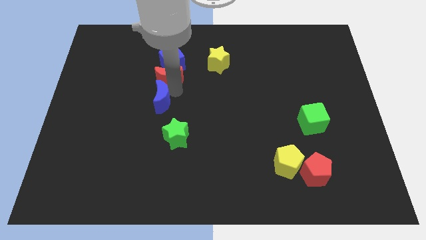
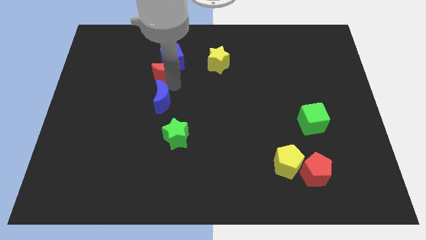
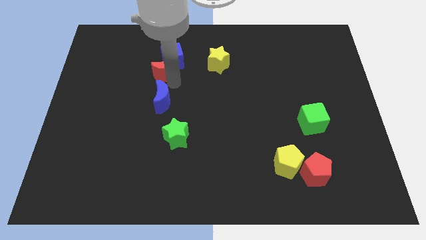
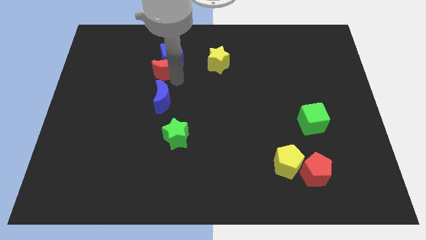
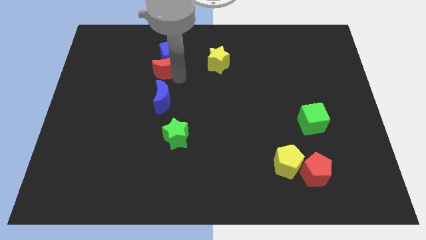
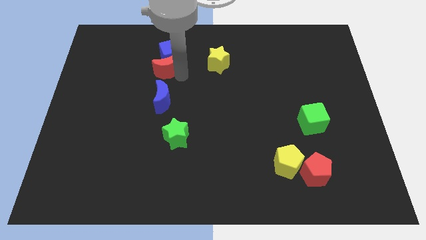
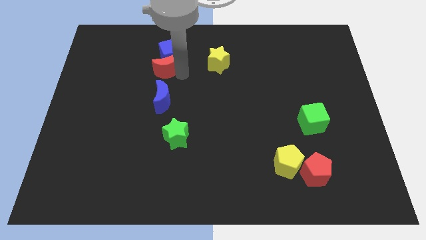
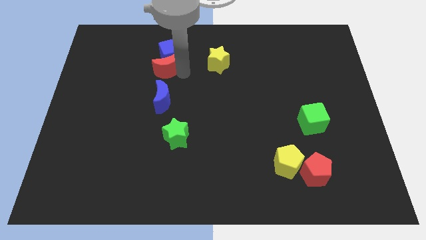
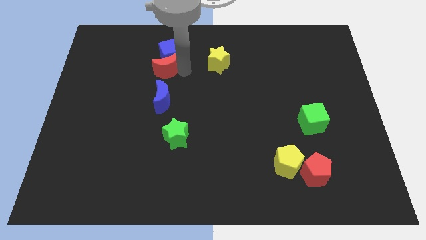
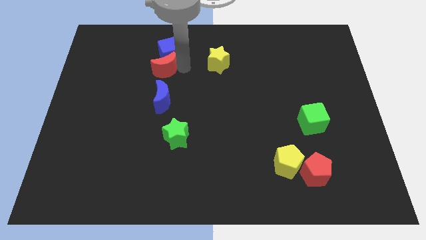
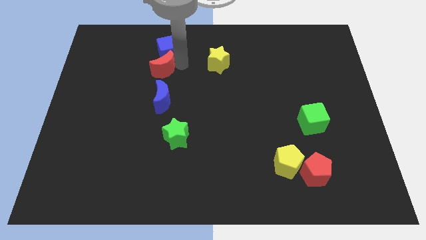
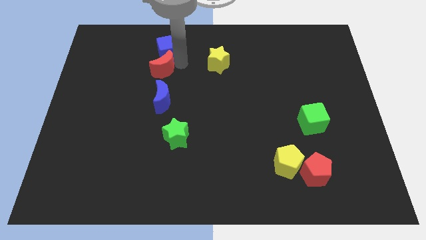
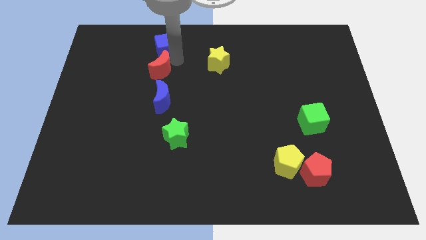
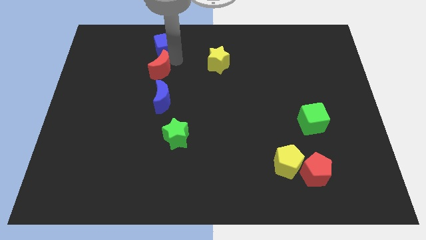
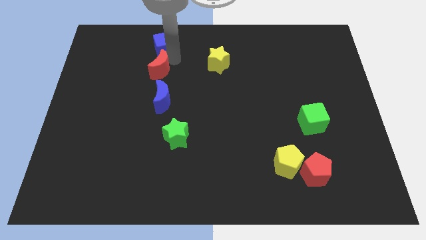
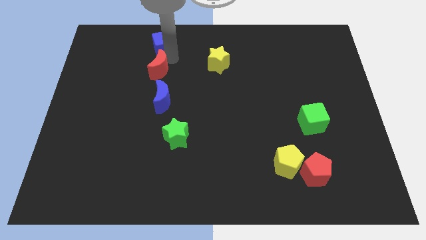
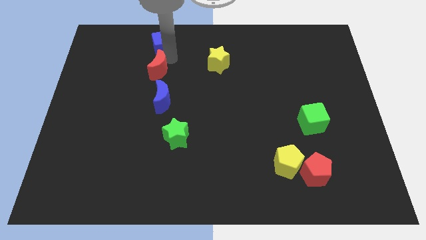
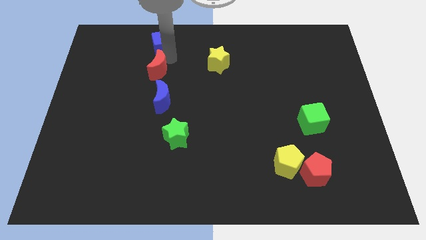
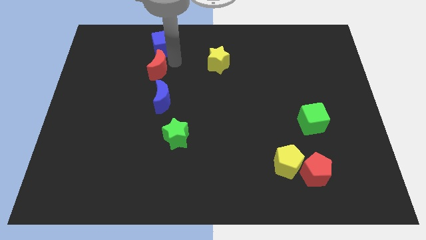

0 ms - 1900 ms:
move the red crescent along with the blue cube to the top

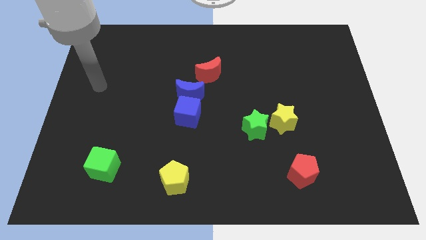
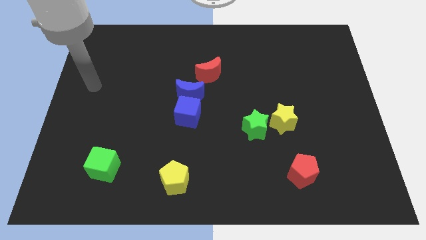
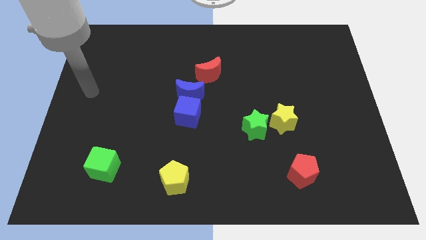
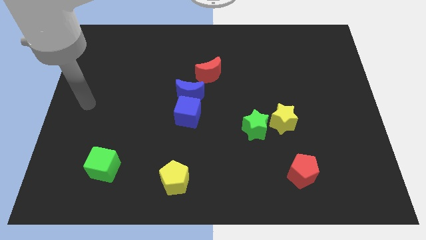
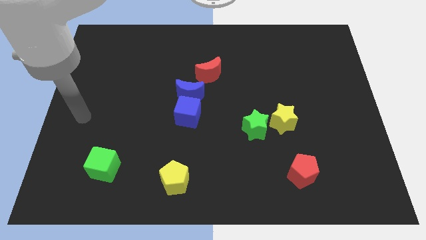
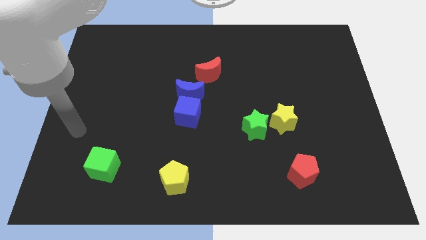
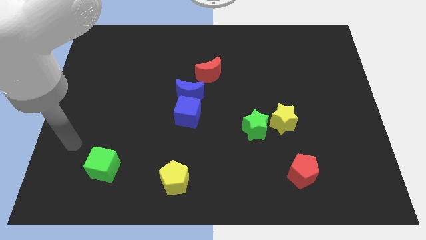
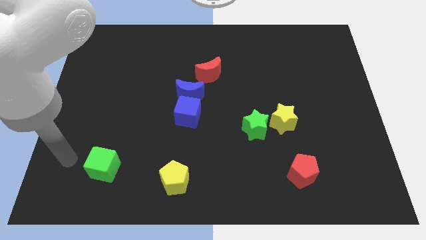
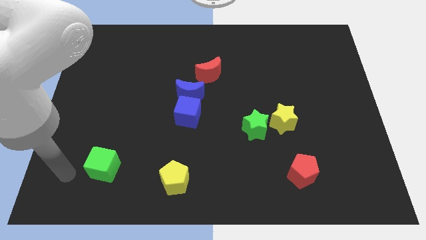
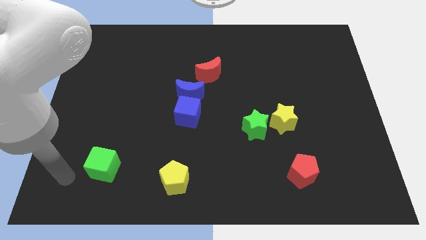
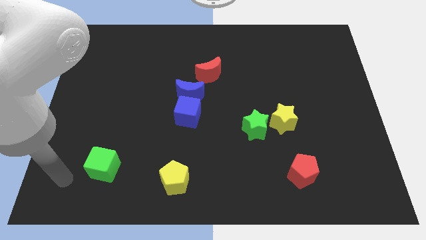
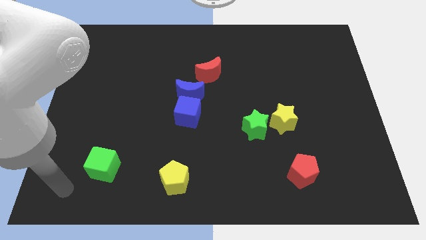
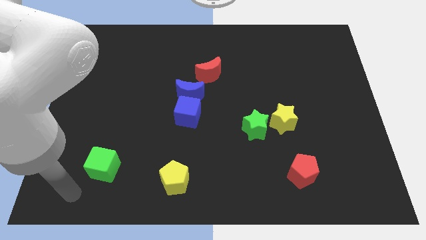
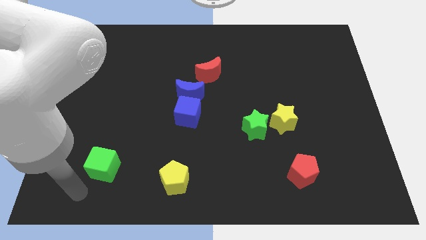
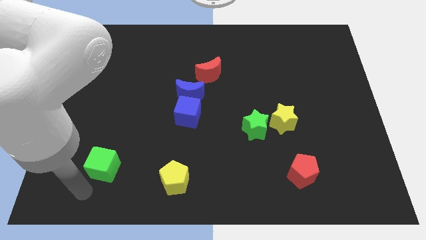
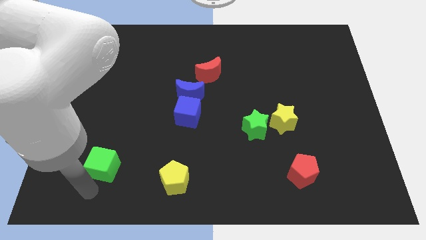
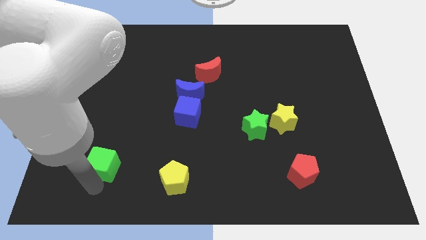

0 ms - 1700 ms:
place the arm down to the green cube

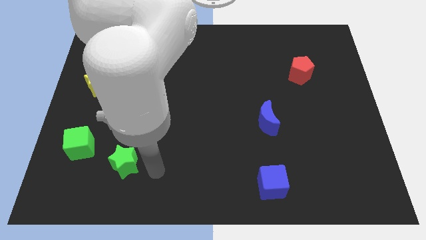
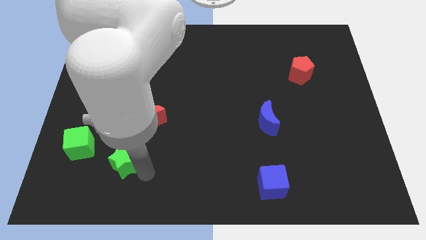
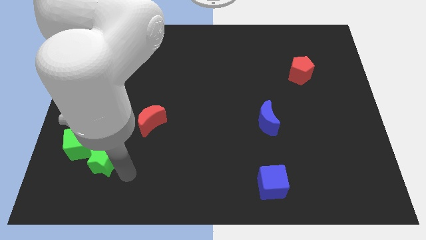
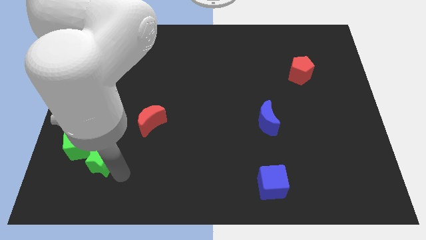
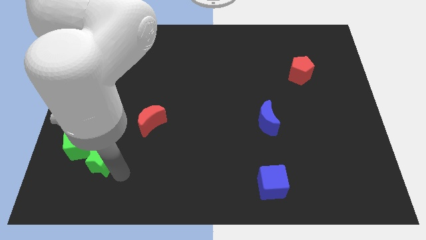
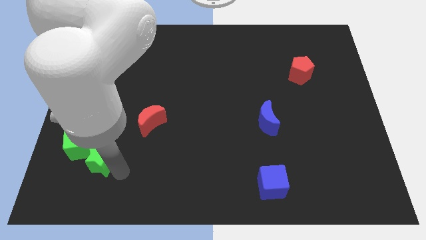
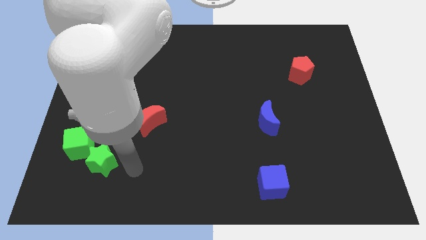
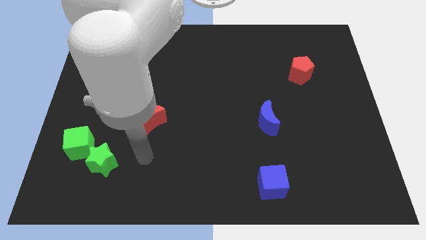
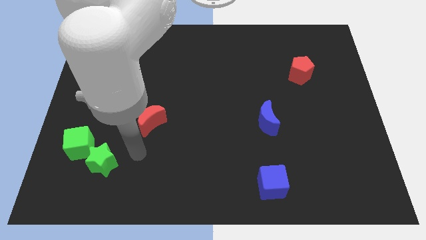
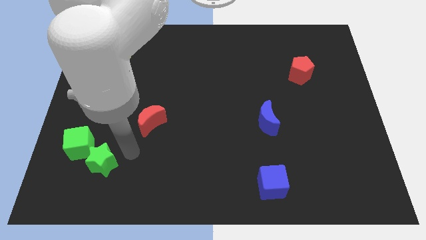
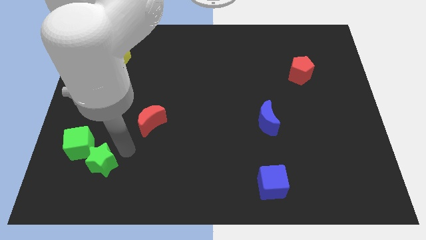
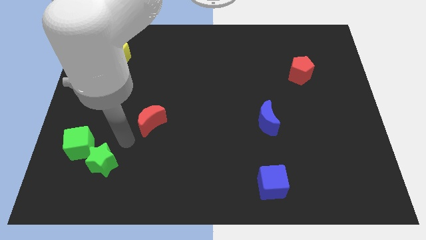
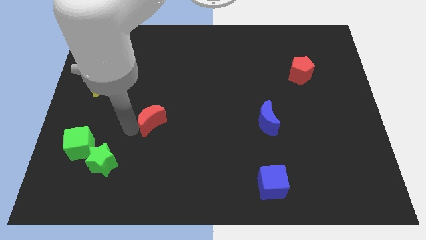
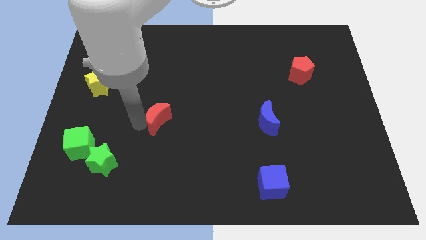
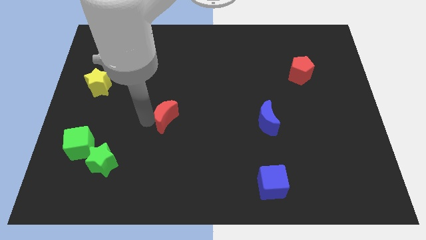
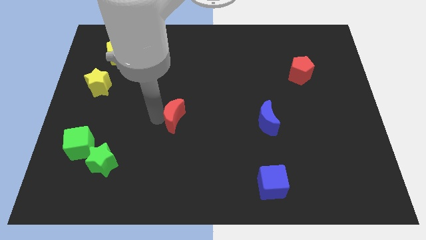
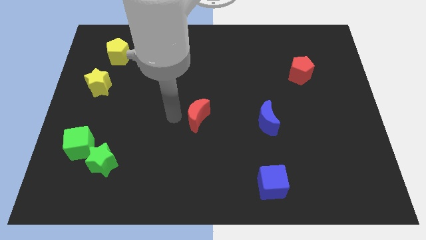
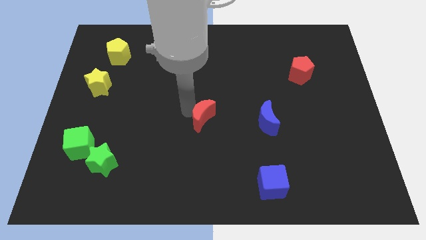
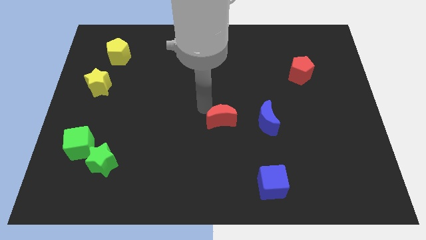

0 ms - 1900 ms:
move red moon towards blue moon

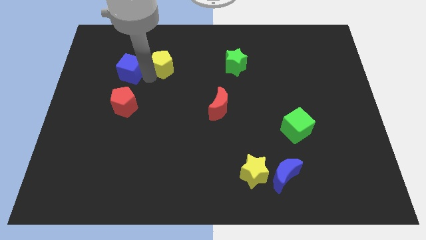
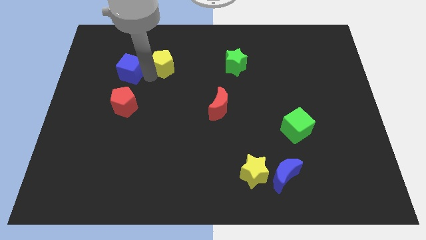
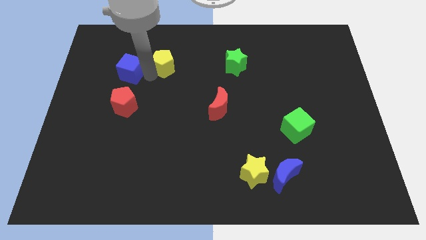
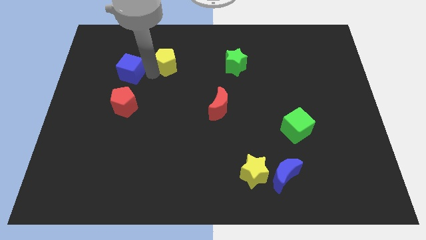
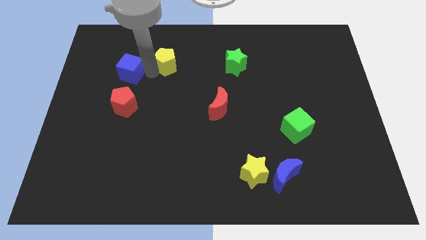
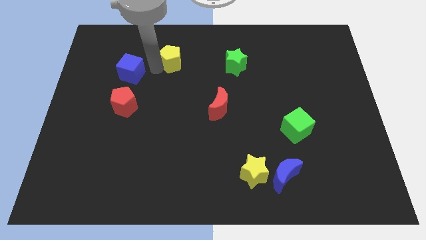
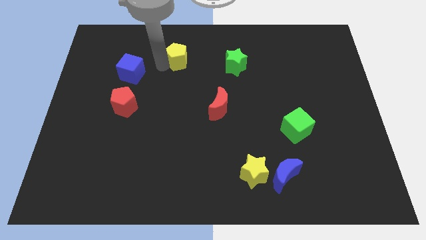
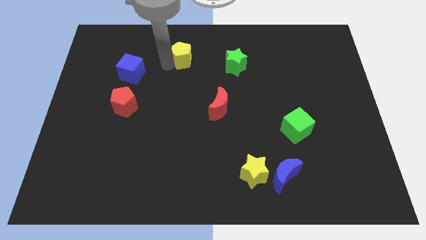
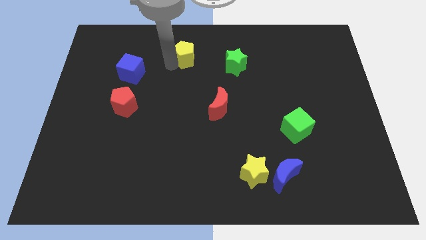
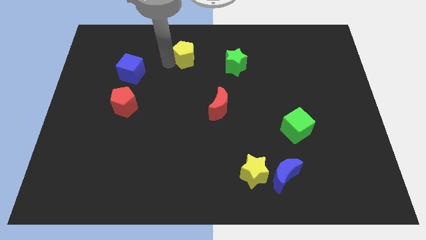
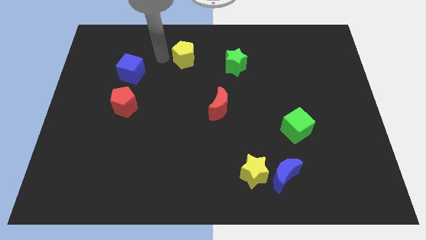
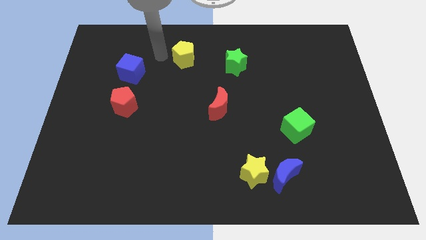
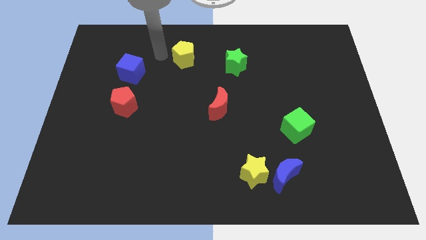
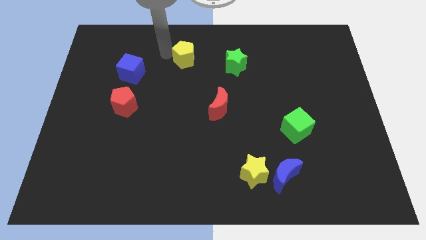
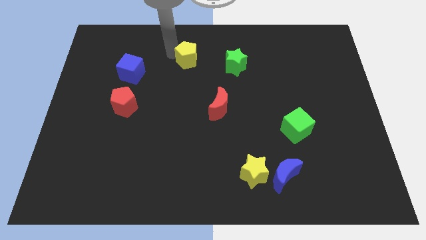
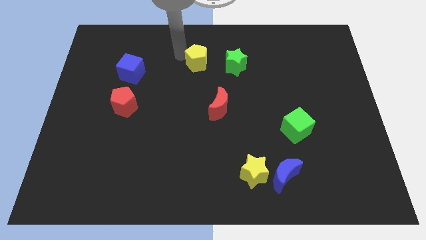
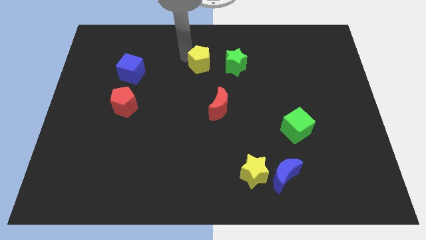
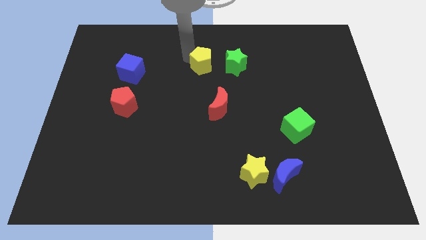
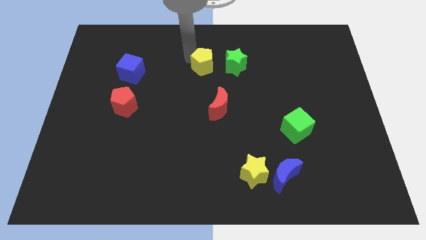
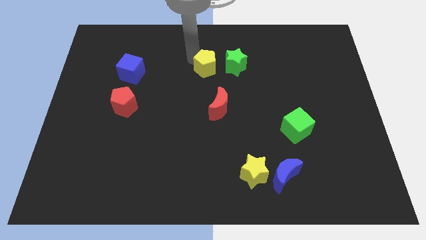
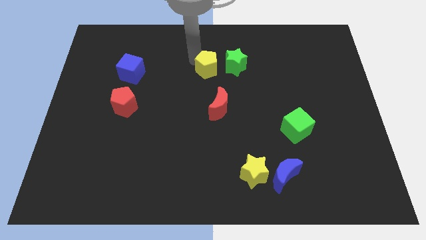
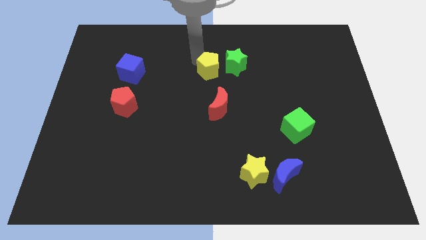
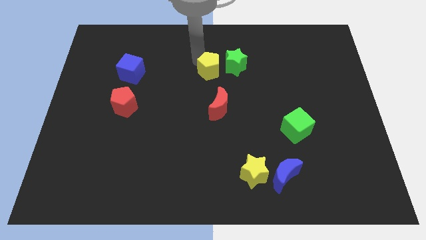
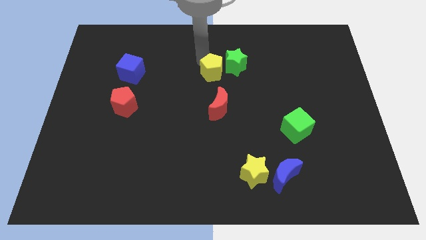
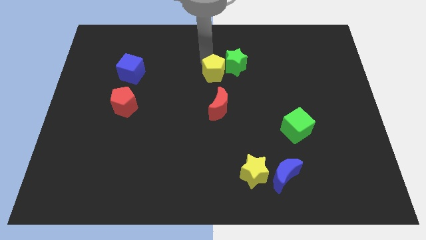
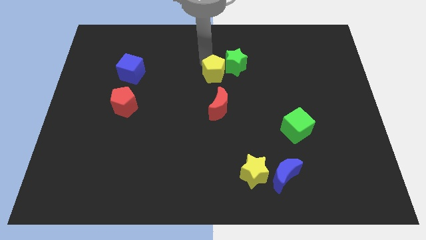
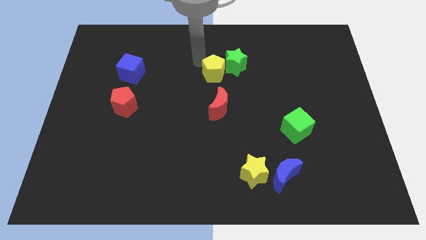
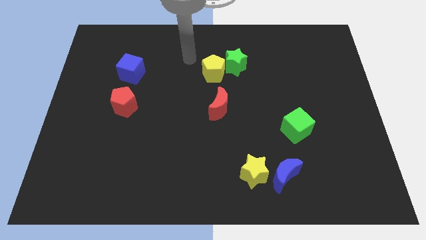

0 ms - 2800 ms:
push the yellow pentagon to the left side of the green star

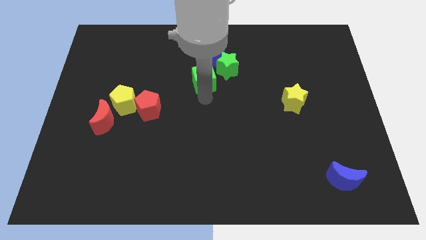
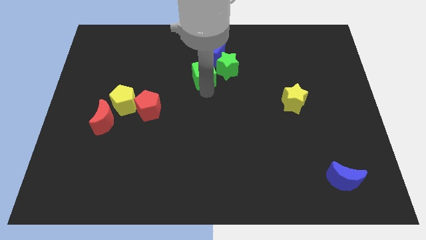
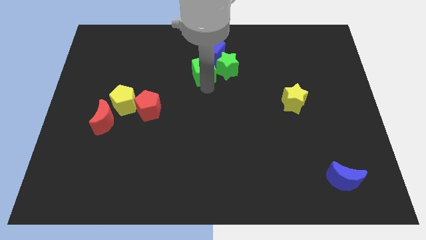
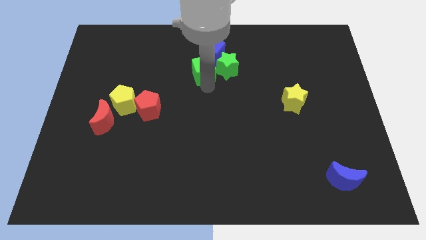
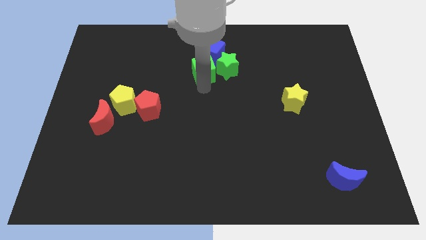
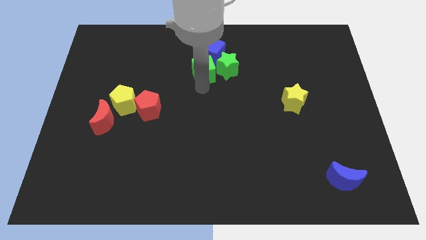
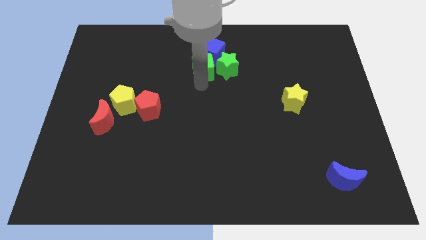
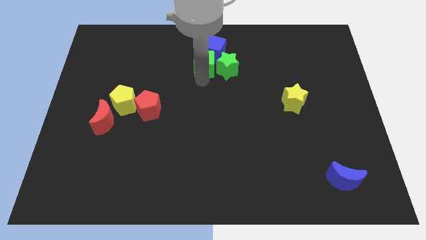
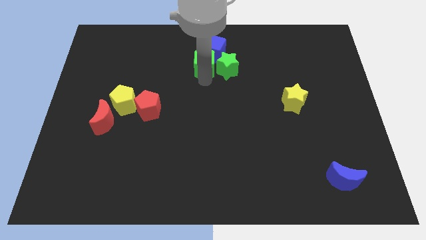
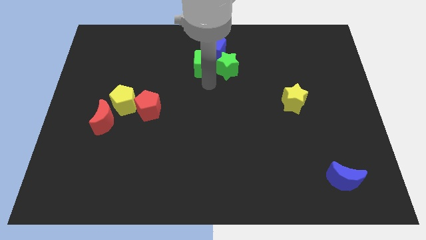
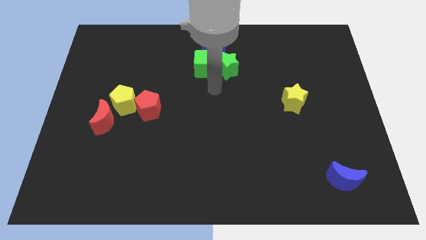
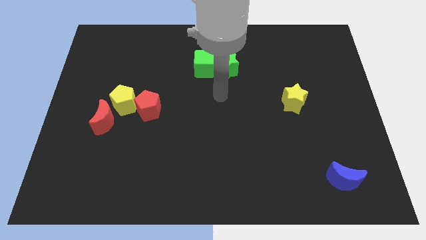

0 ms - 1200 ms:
push the green cube into the blue cube
